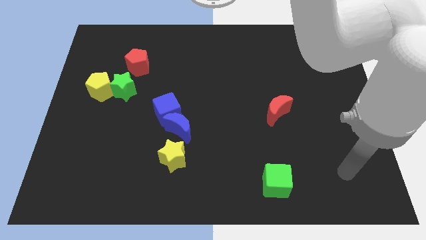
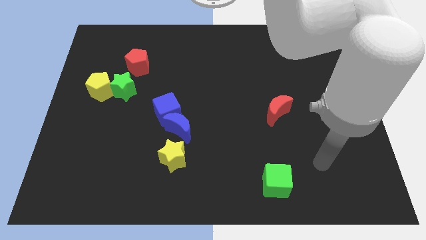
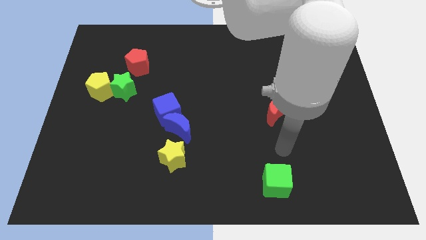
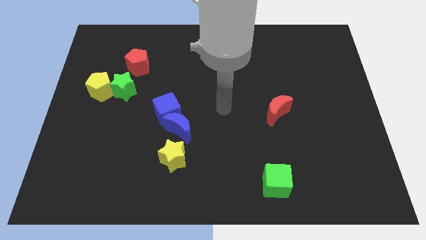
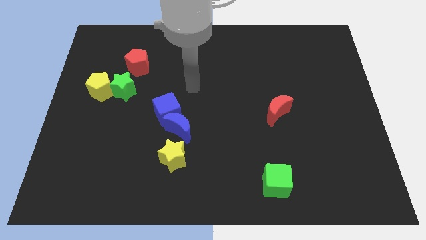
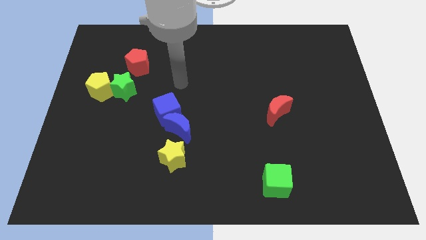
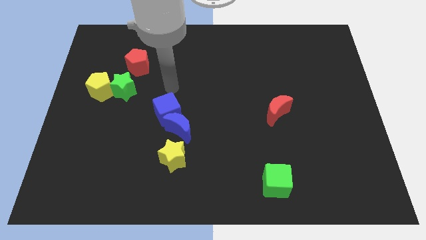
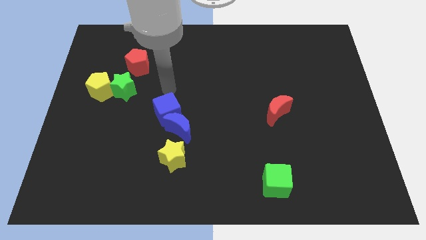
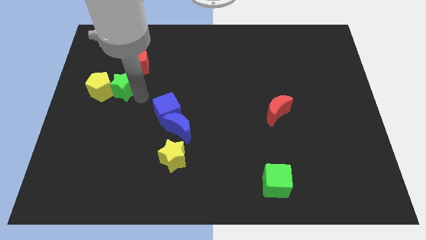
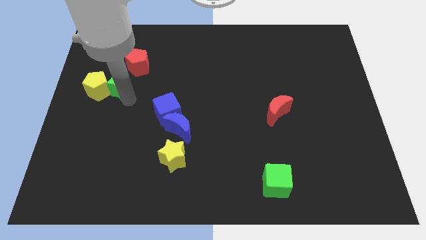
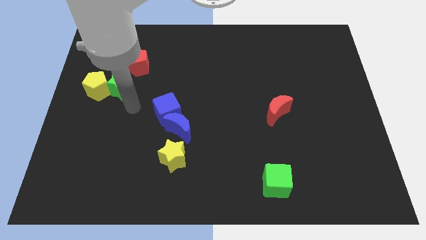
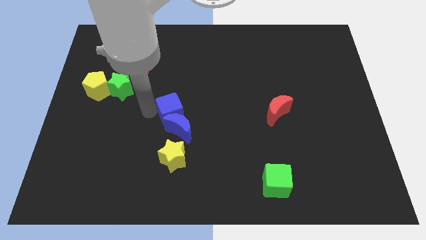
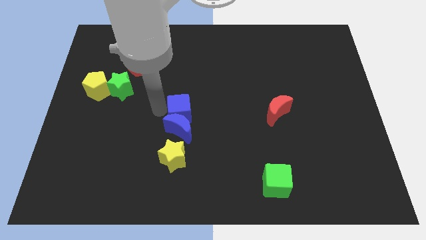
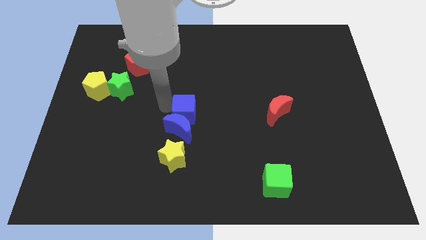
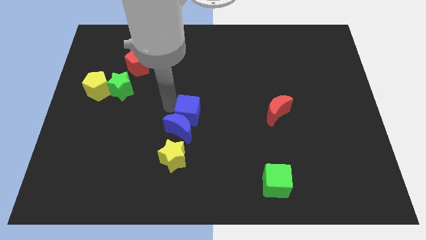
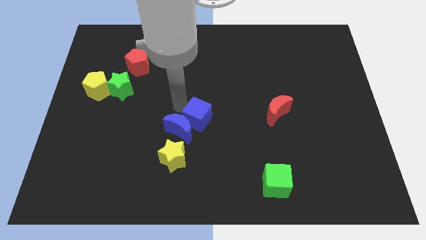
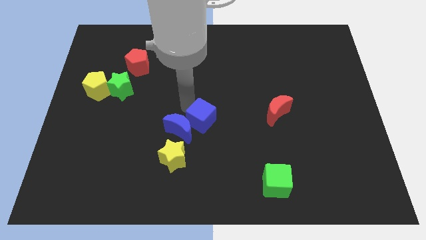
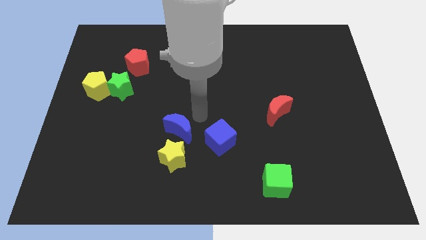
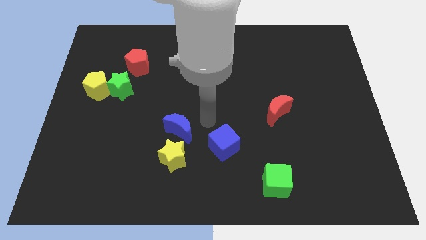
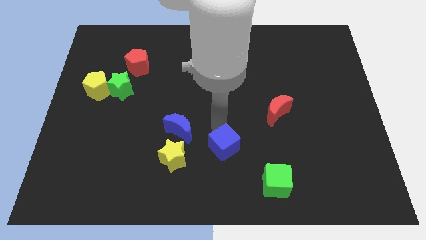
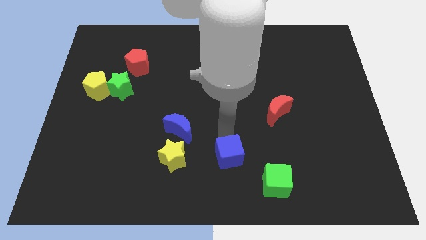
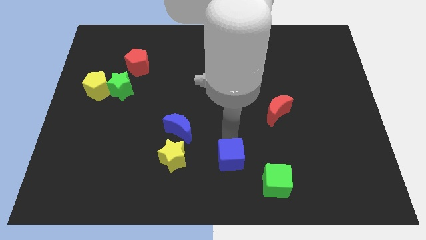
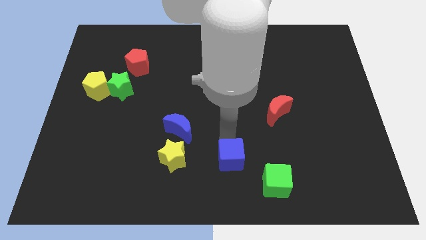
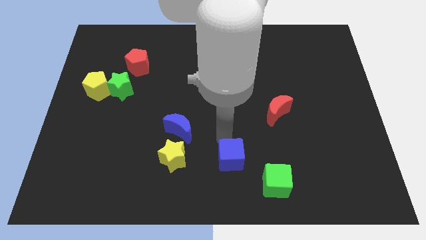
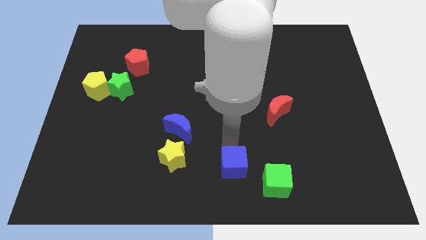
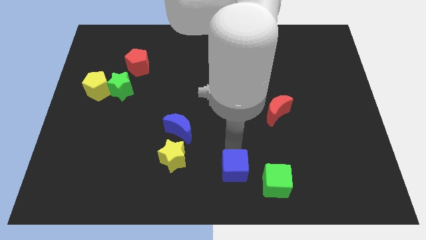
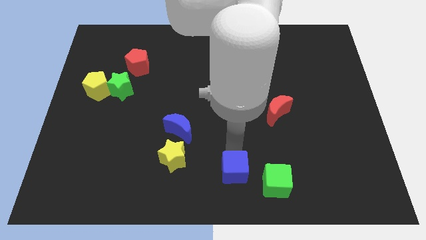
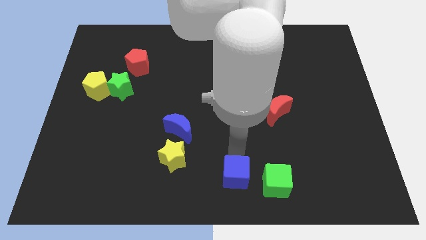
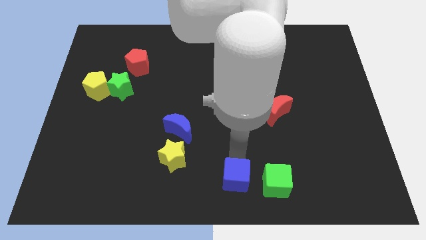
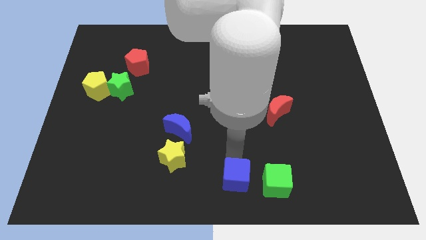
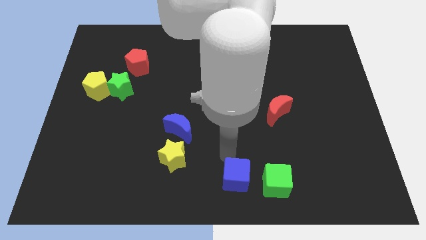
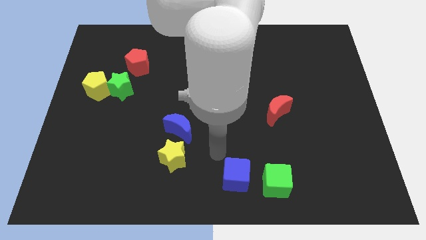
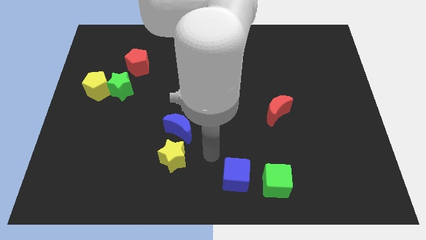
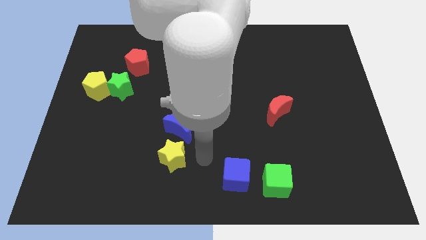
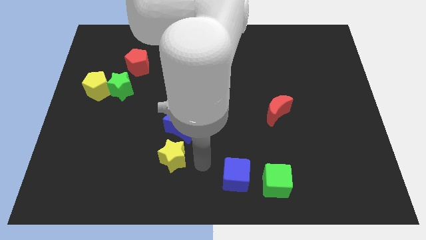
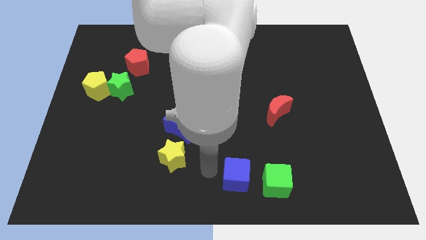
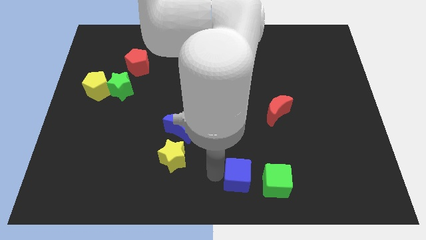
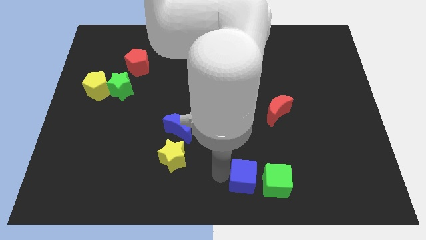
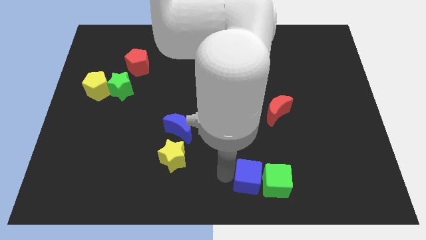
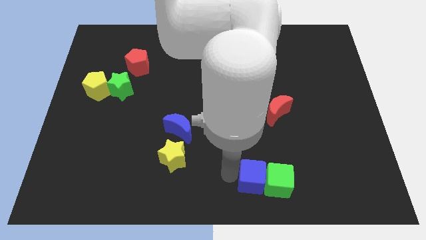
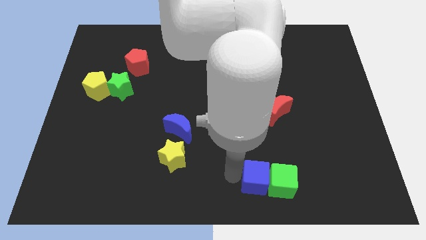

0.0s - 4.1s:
push the blue cube next to the green cube

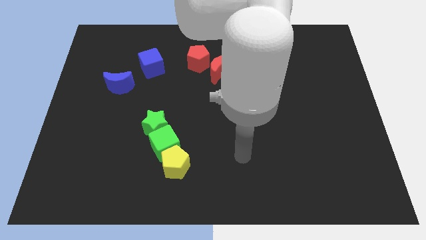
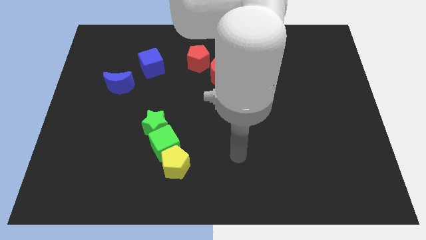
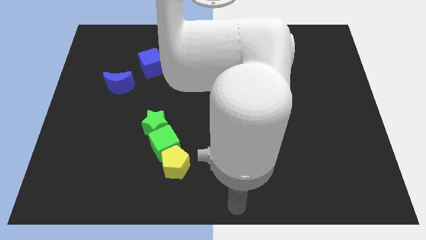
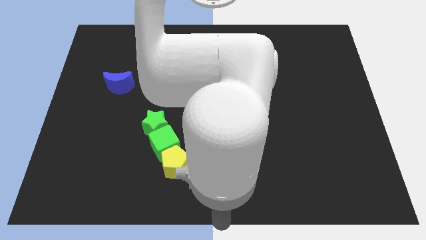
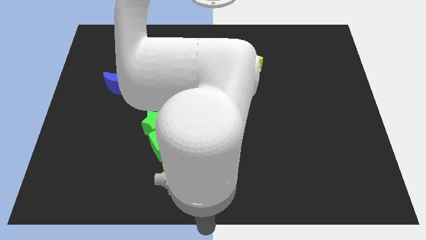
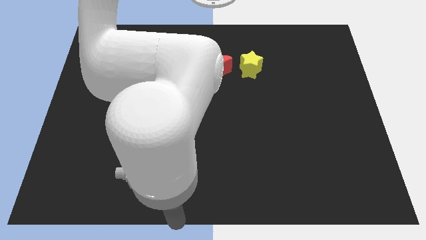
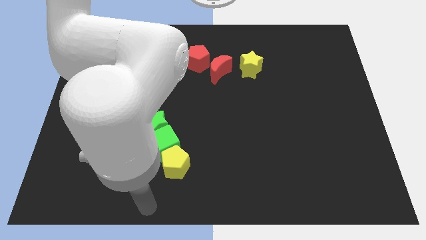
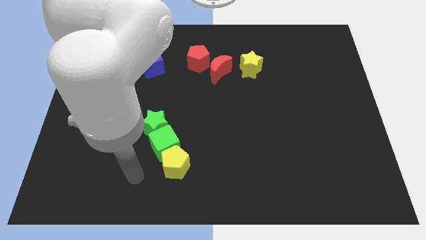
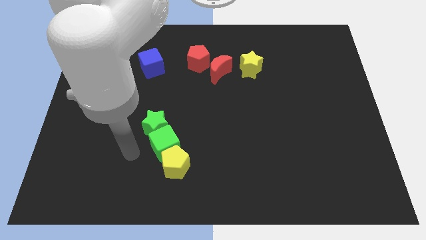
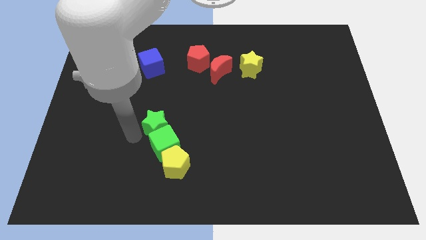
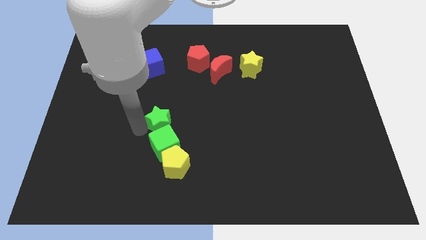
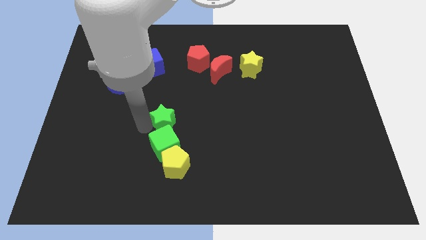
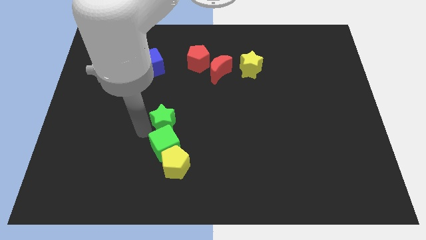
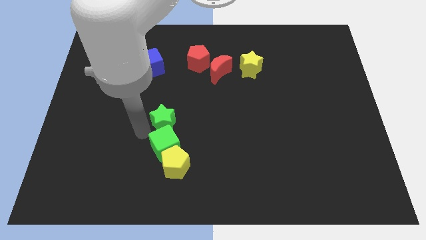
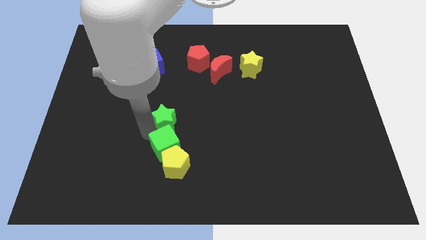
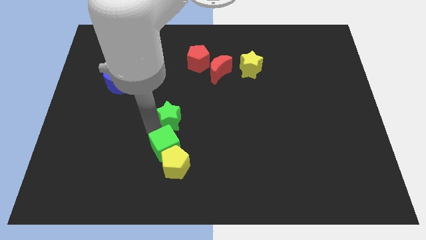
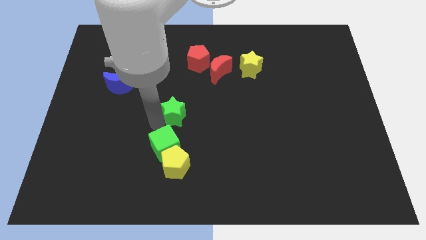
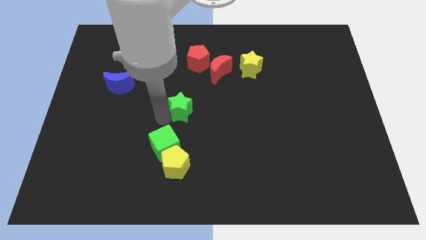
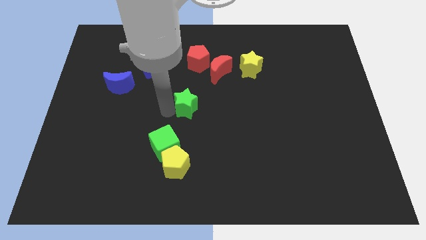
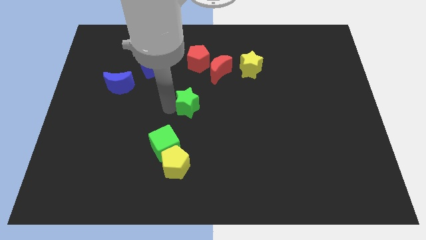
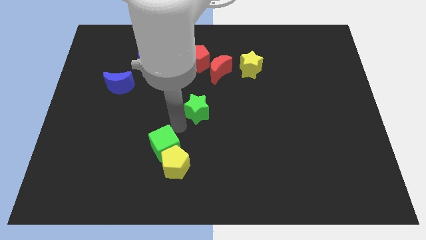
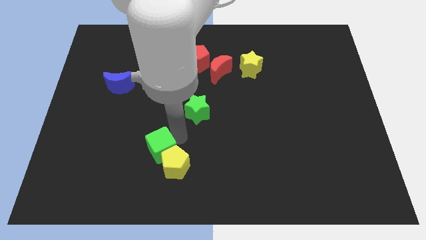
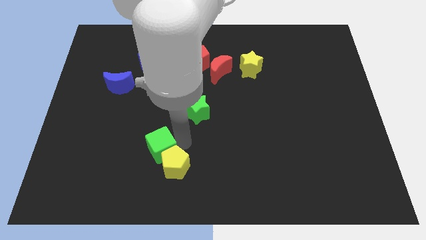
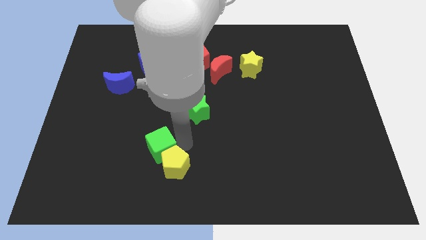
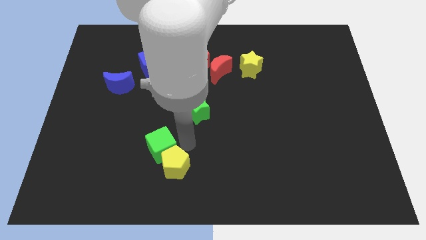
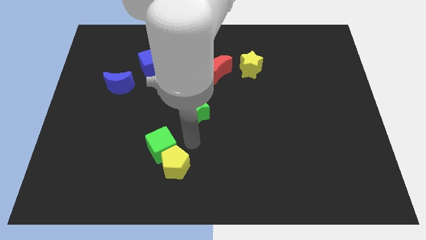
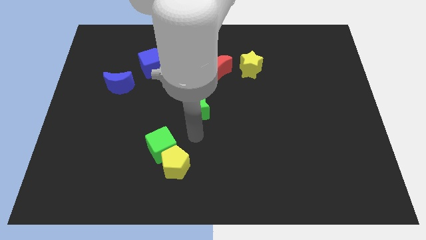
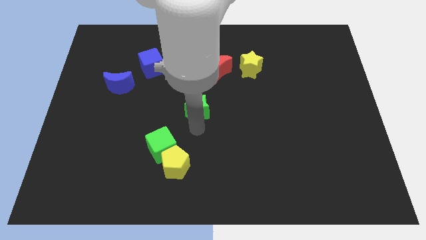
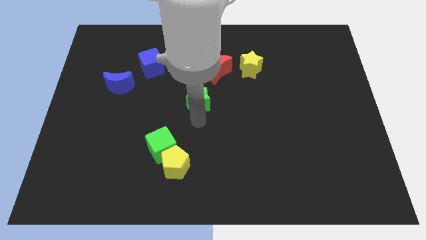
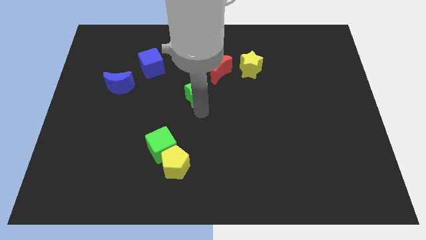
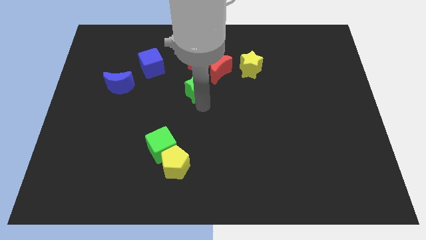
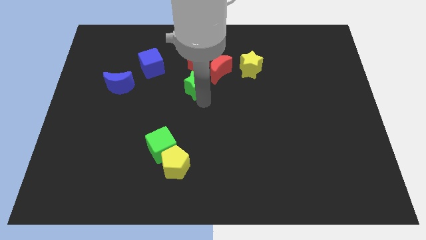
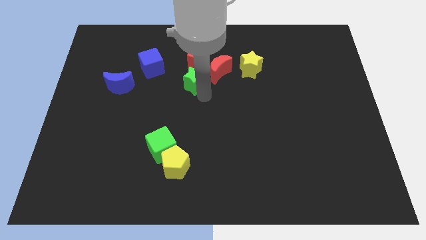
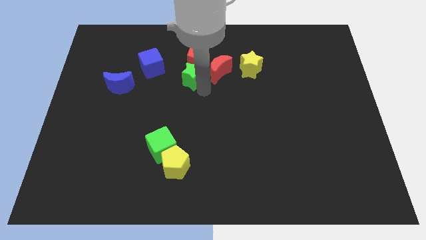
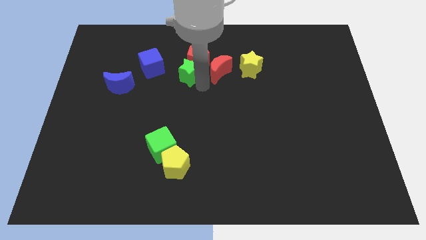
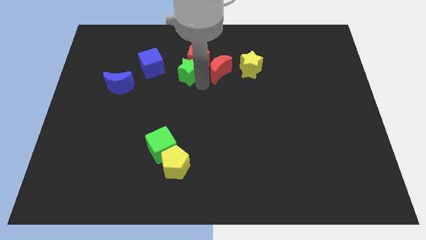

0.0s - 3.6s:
slide the green star close to the red pentagon

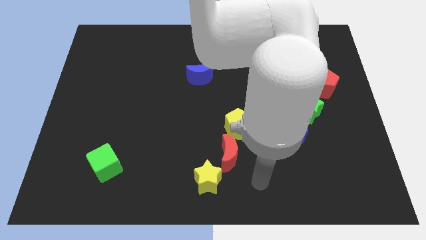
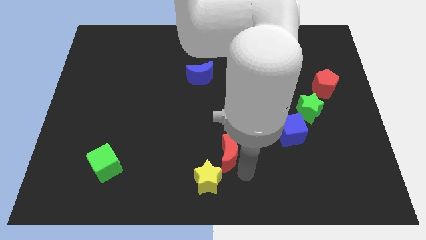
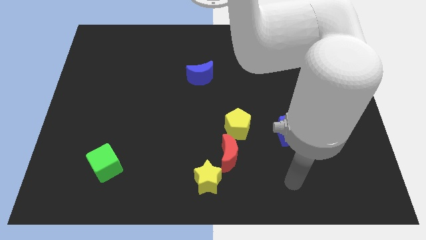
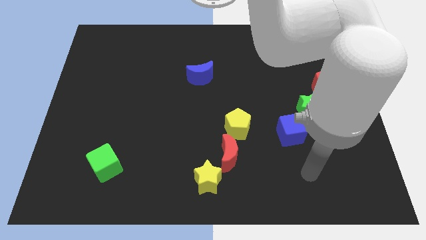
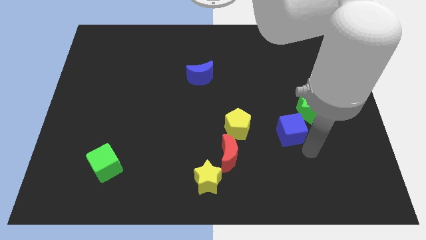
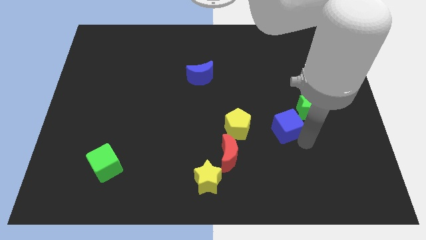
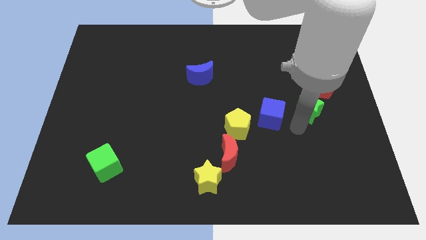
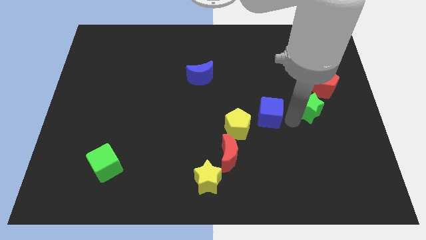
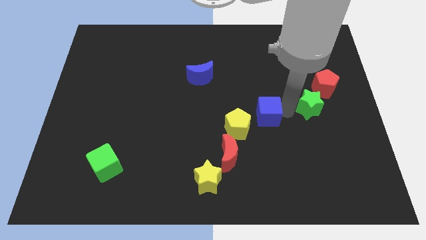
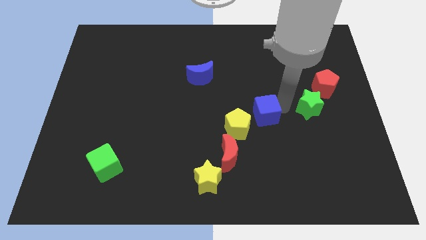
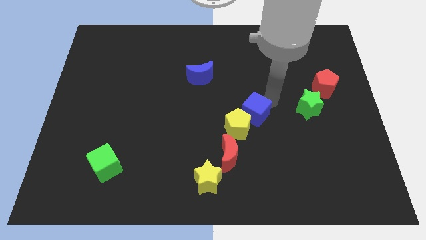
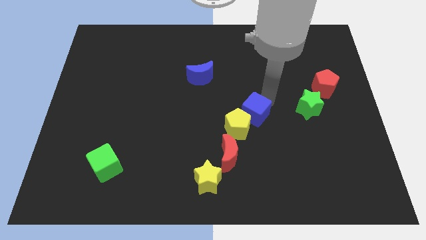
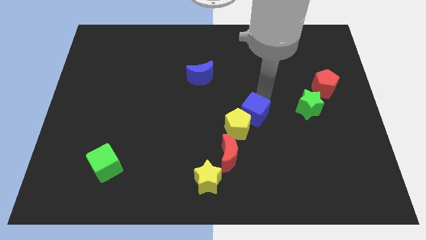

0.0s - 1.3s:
slide the blue cube close to the yellow pentagon
